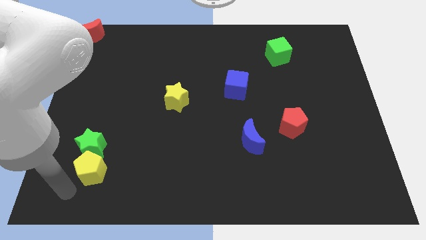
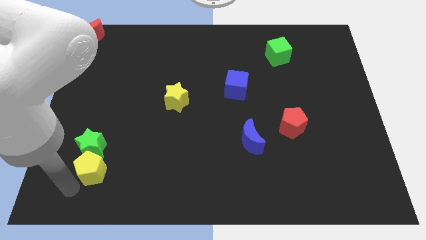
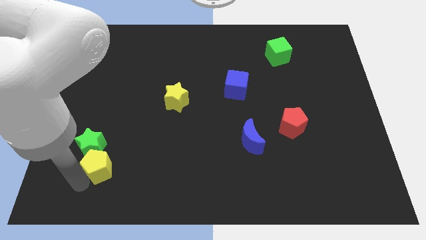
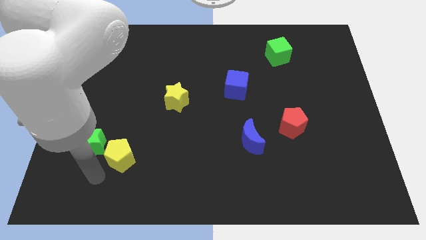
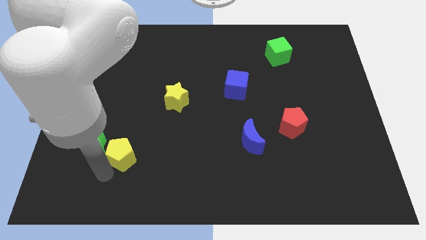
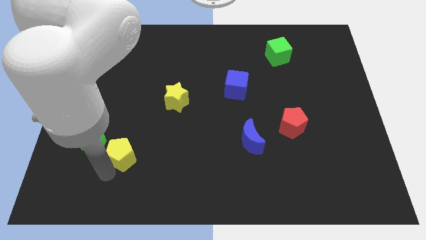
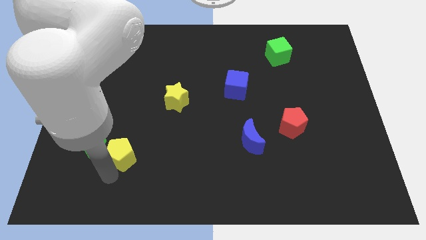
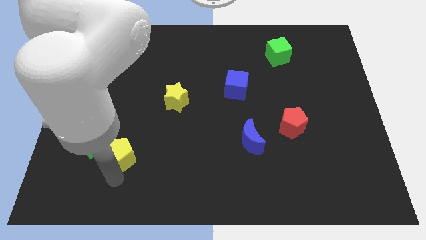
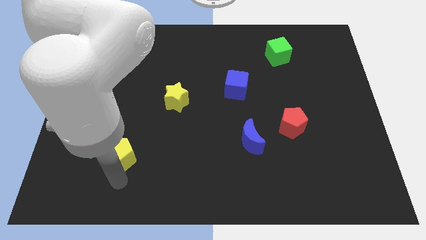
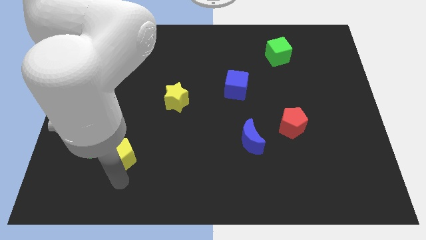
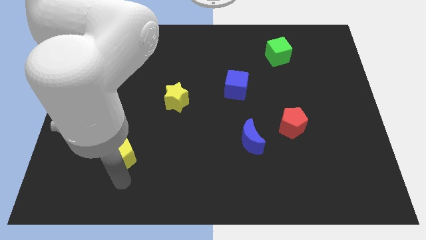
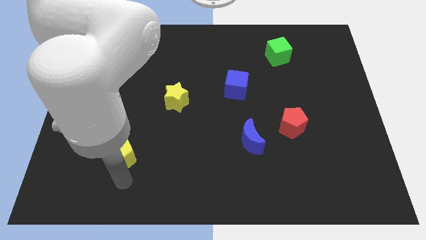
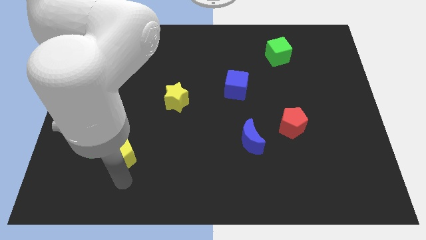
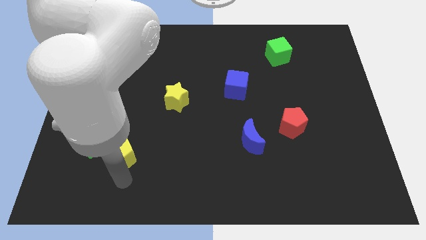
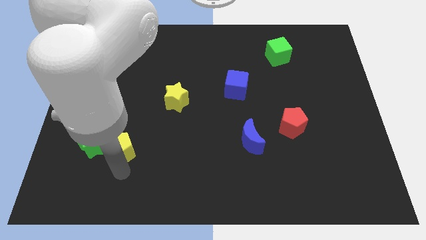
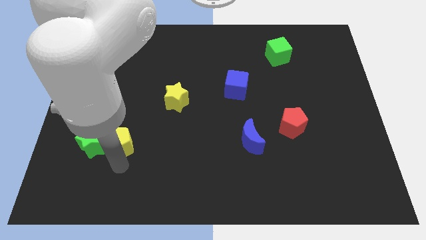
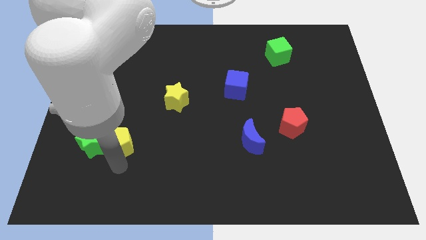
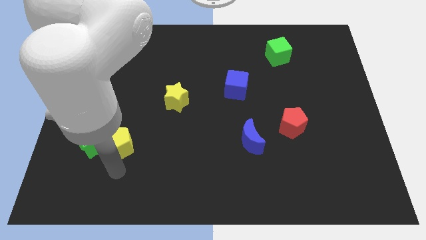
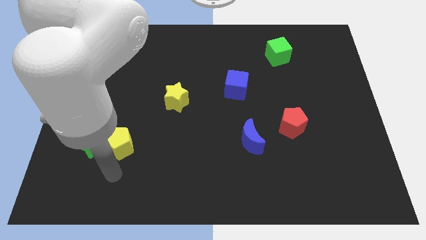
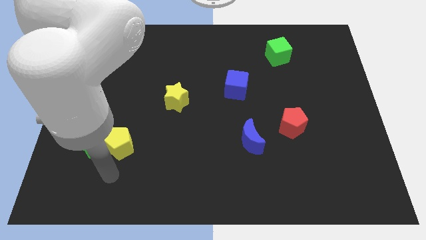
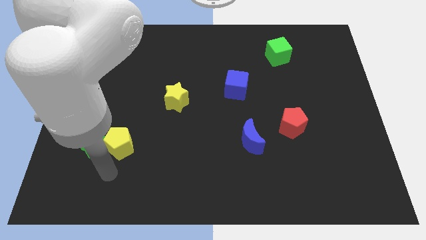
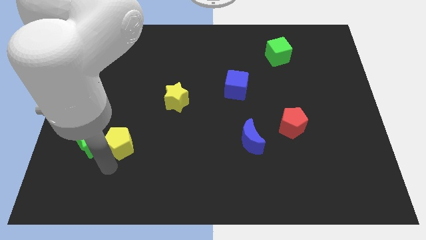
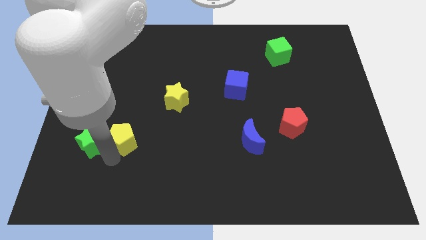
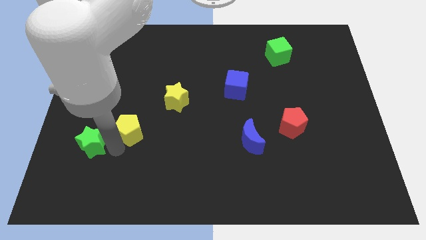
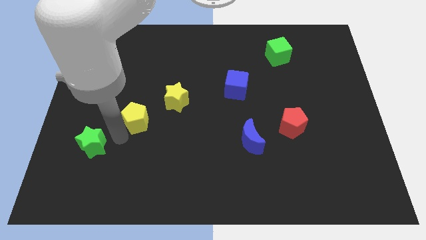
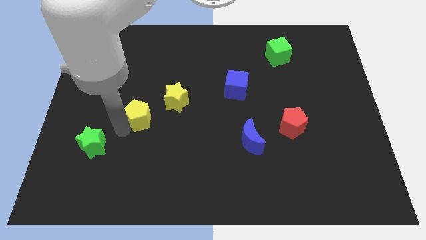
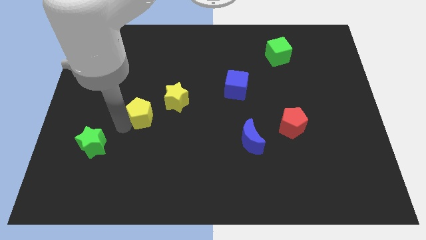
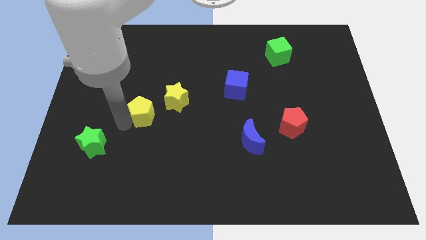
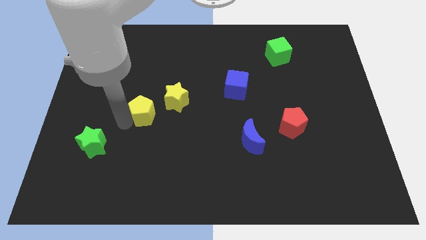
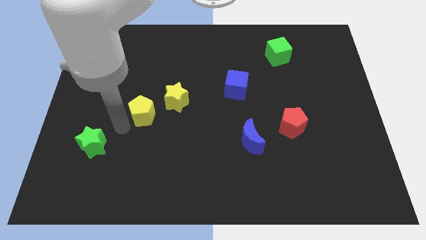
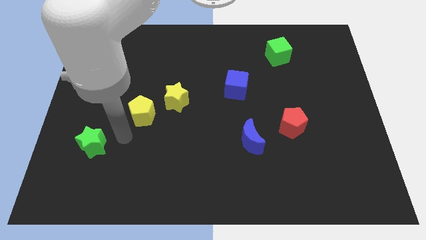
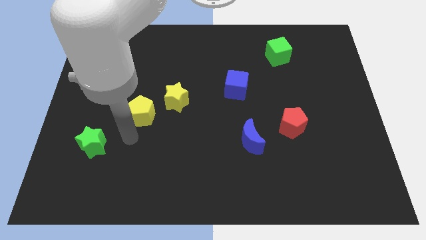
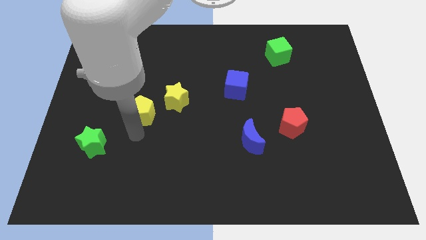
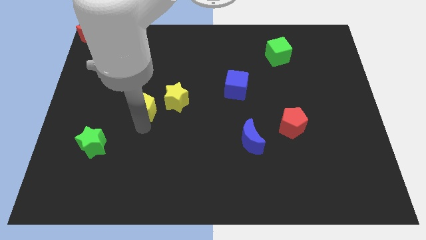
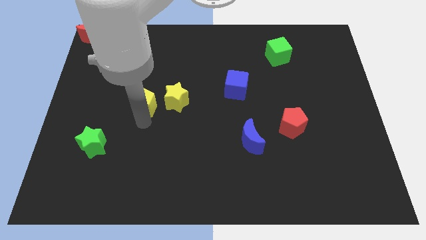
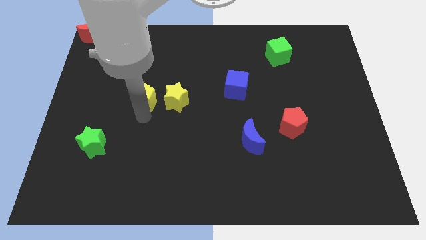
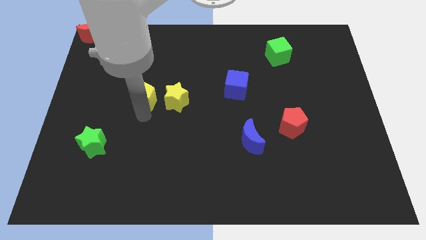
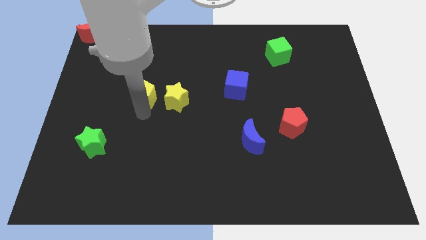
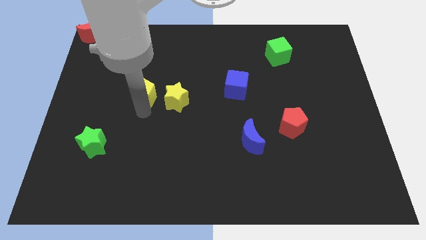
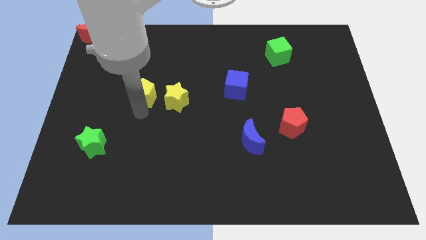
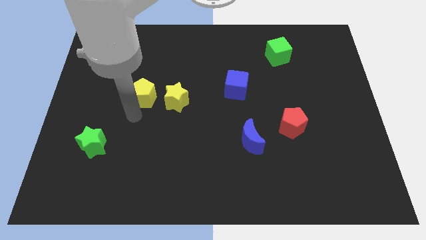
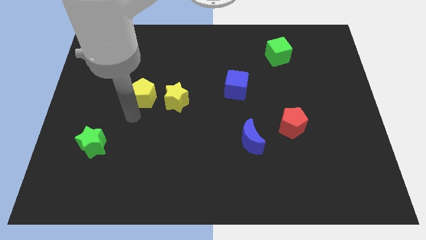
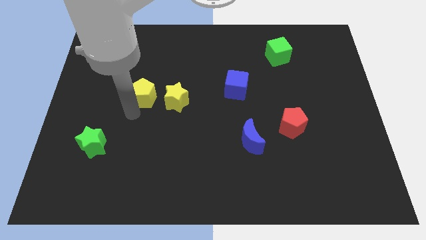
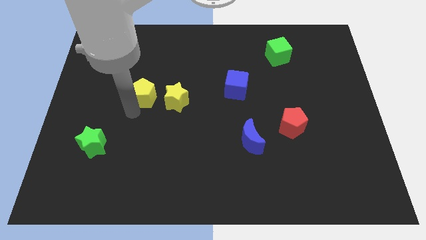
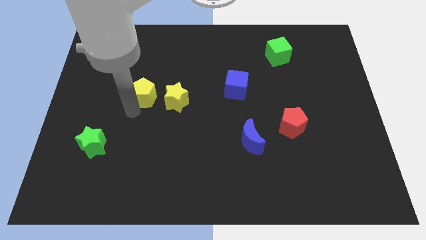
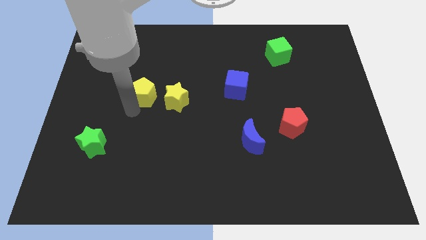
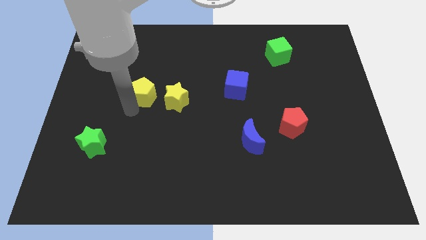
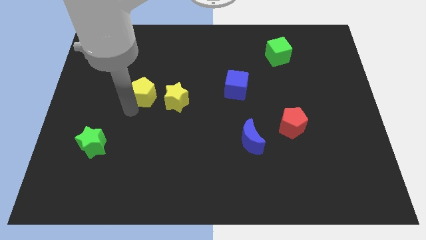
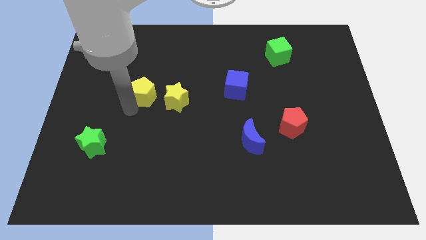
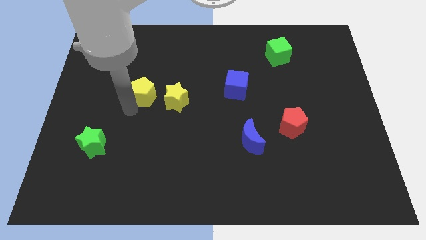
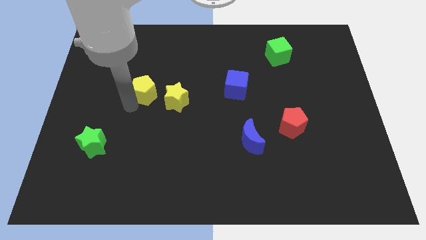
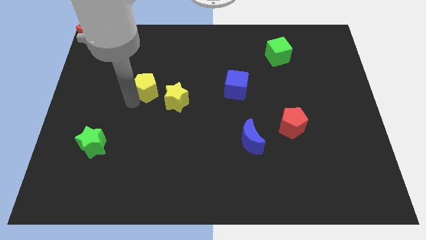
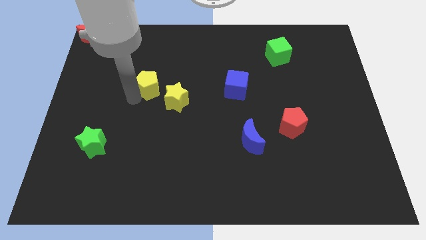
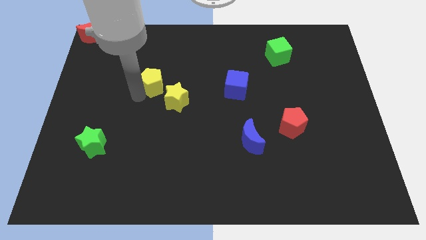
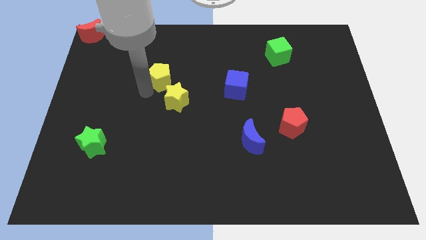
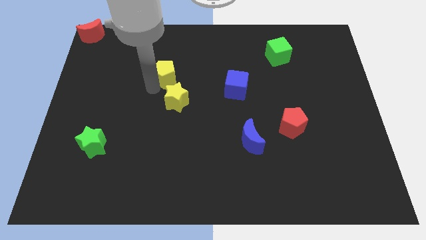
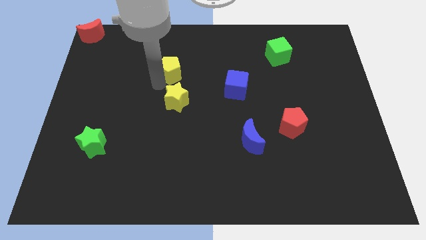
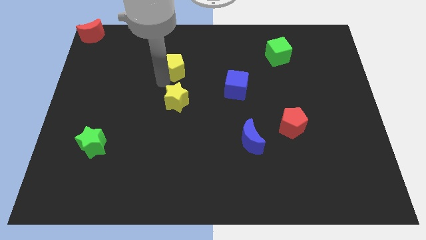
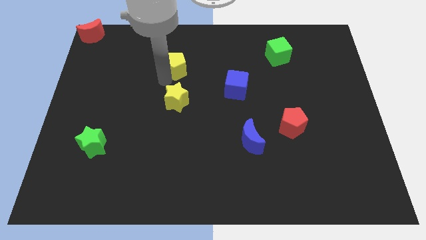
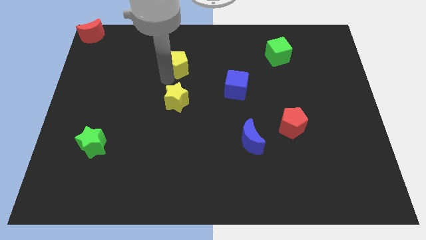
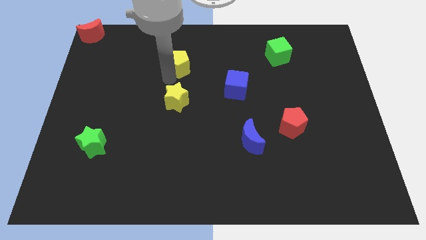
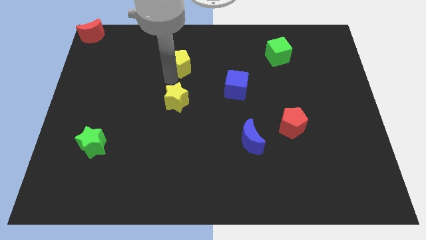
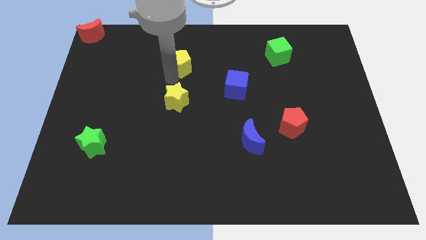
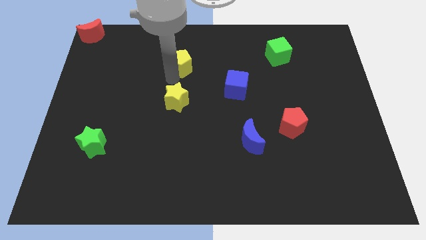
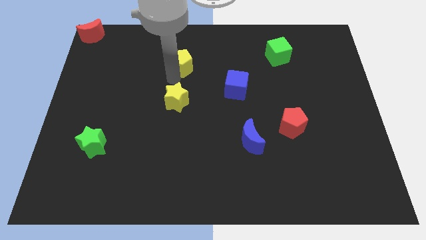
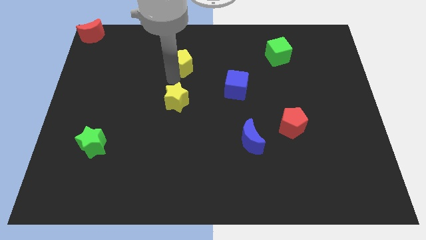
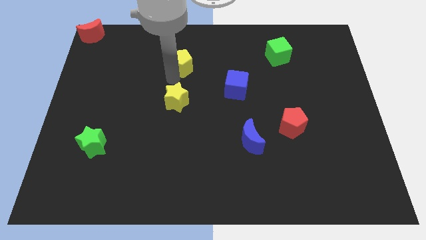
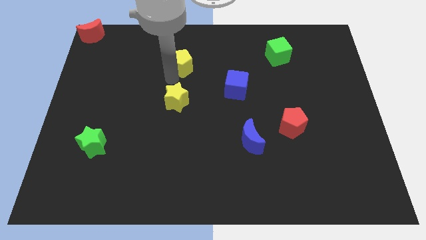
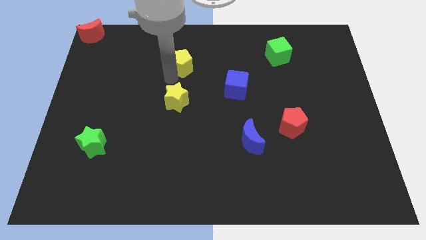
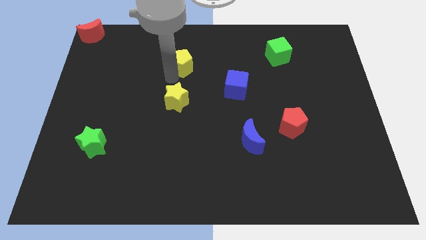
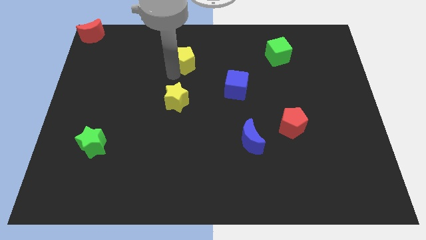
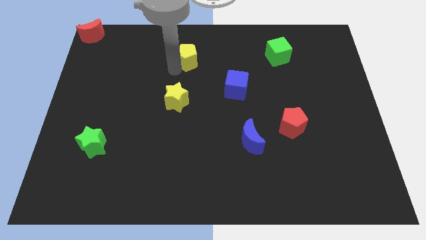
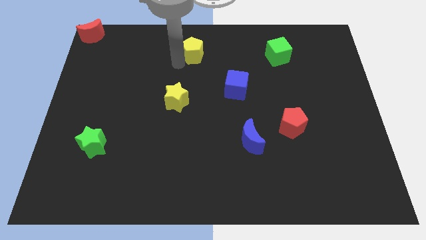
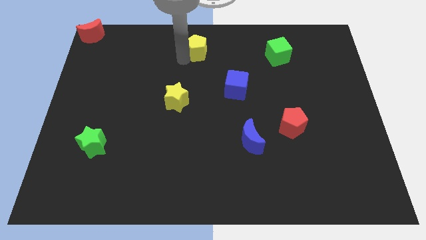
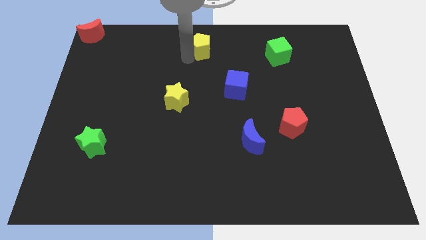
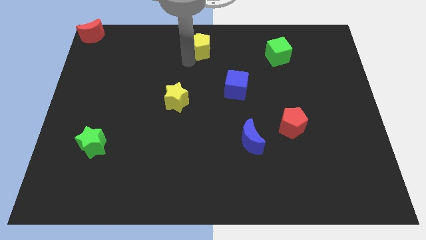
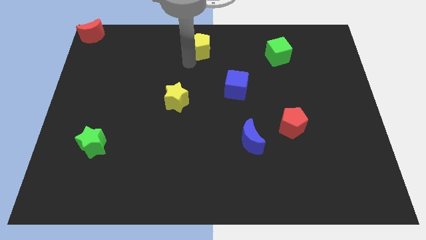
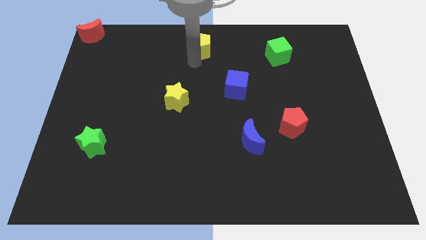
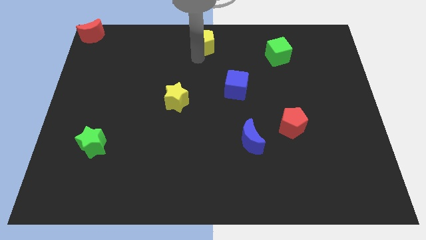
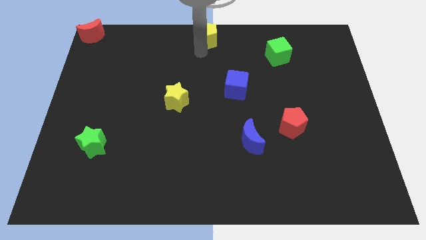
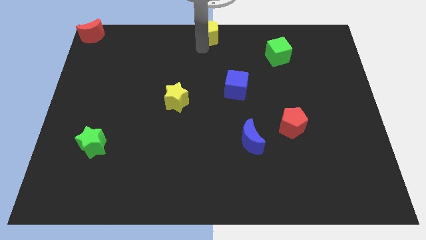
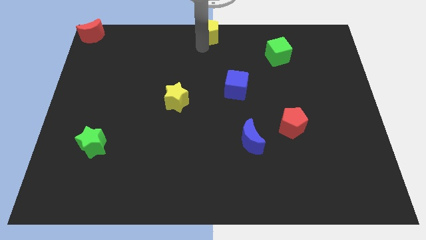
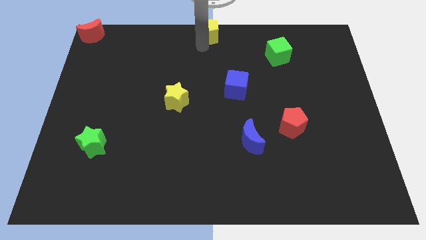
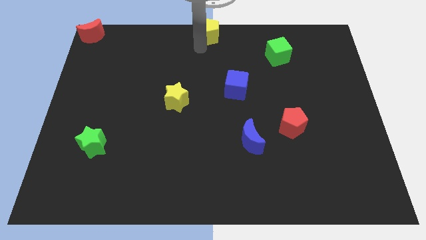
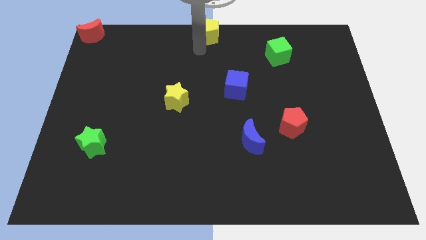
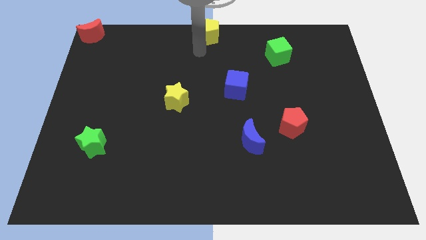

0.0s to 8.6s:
push the yellow pentagon to the top center of the board

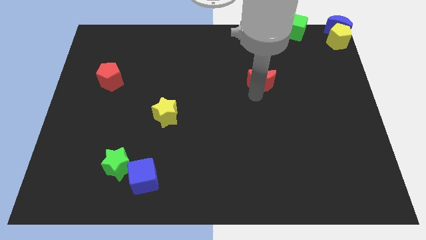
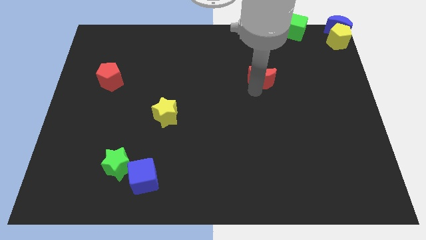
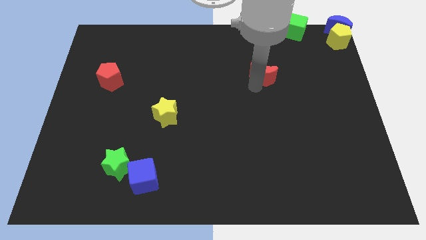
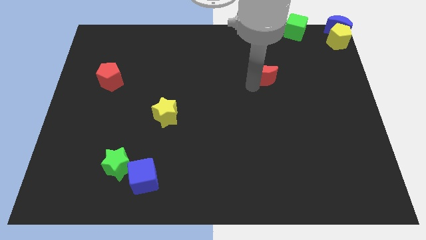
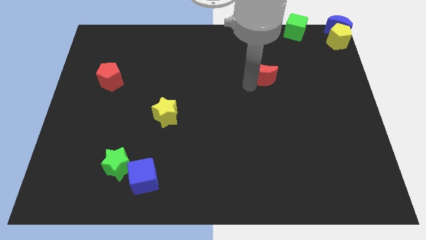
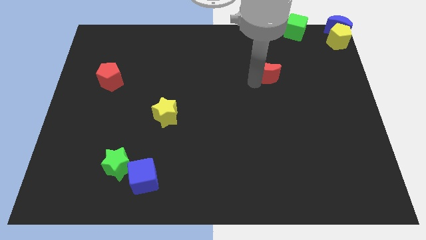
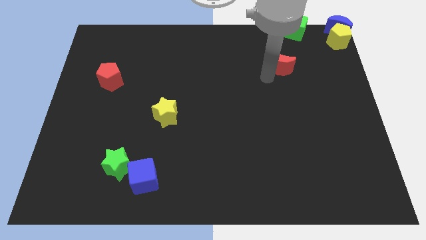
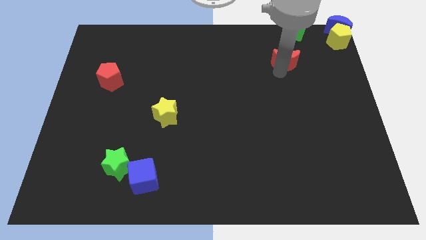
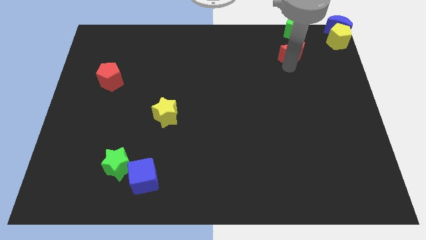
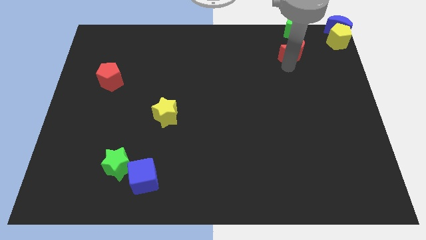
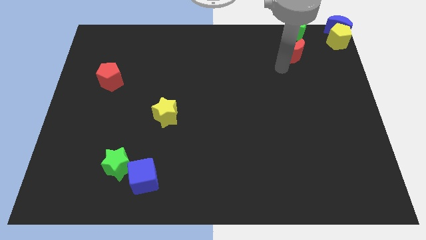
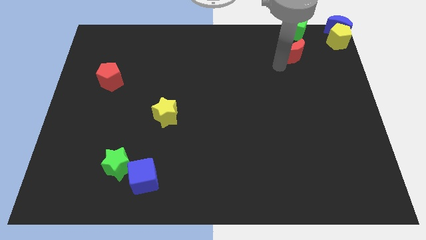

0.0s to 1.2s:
place the red moon below the green cube
